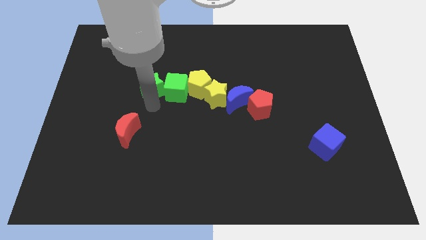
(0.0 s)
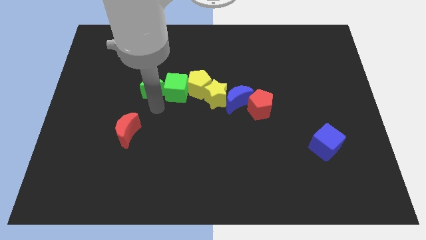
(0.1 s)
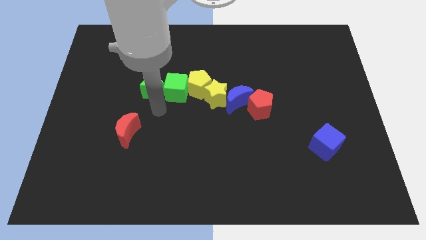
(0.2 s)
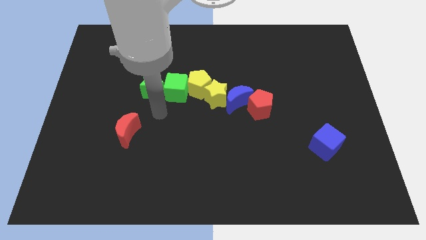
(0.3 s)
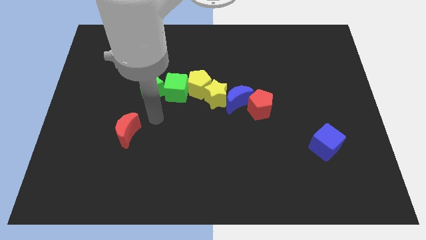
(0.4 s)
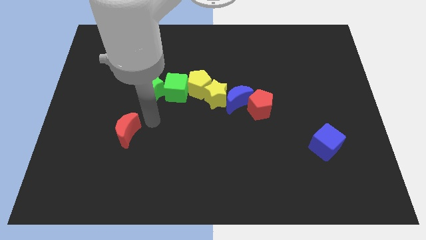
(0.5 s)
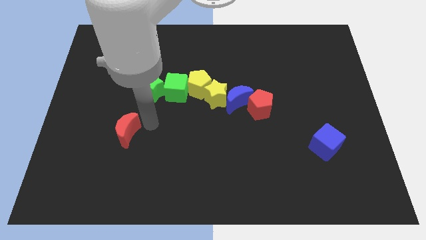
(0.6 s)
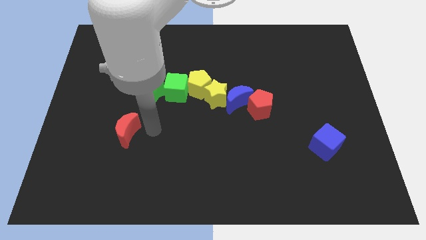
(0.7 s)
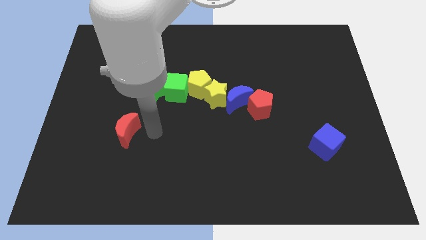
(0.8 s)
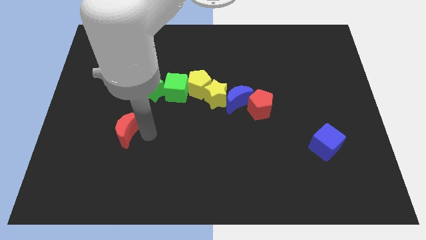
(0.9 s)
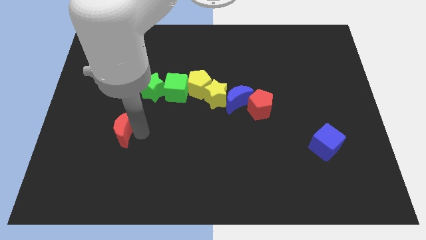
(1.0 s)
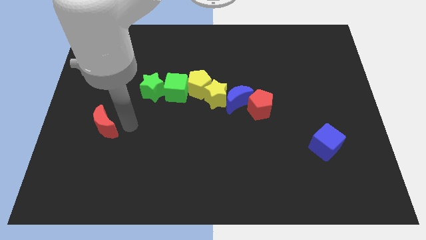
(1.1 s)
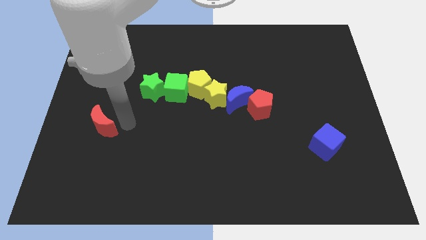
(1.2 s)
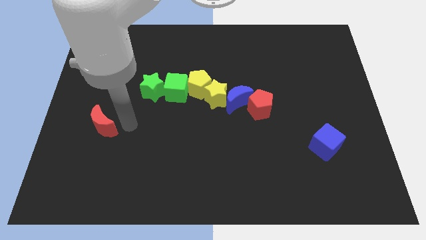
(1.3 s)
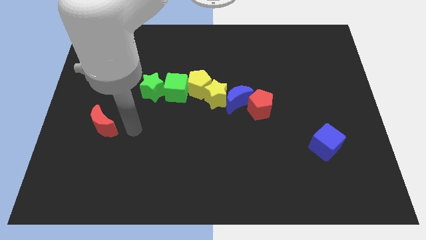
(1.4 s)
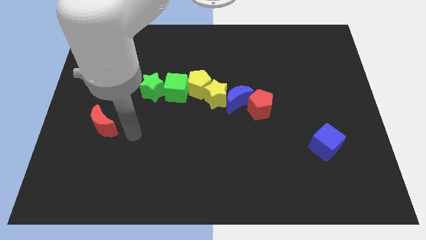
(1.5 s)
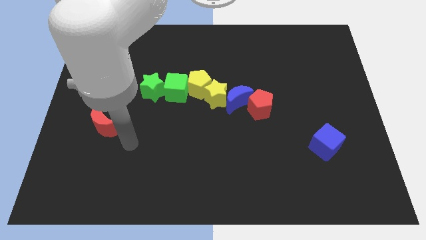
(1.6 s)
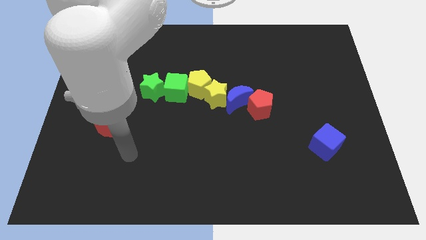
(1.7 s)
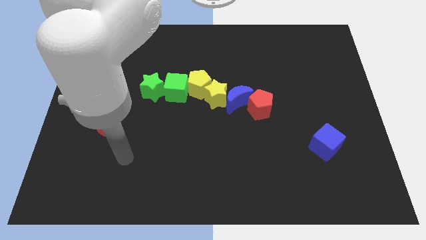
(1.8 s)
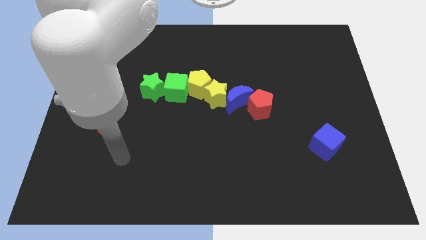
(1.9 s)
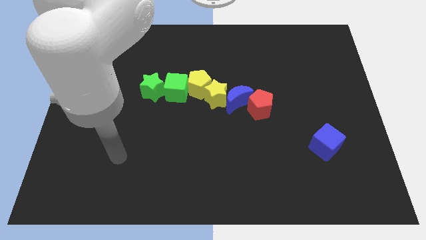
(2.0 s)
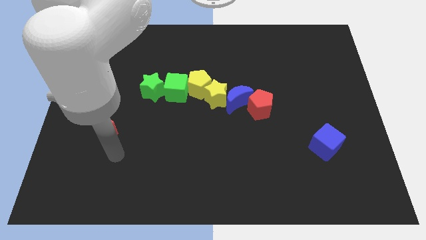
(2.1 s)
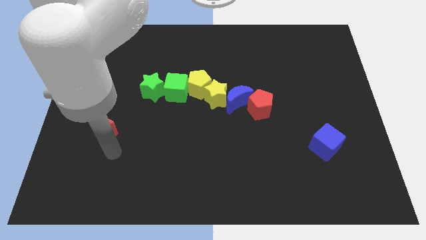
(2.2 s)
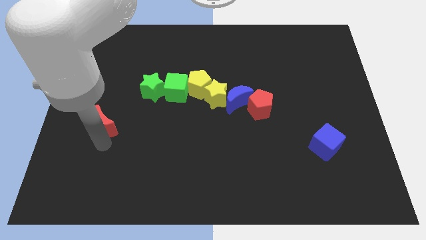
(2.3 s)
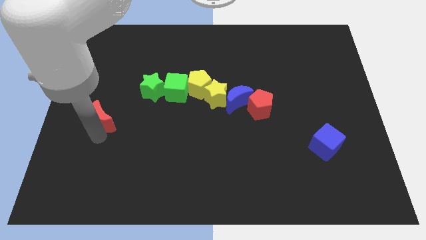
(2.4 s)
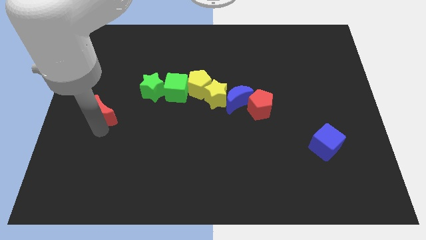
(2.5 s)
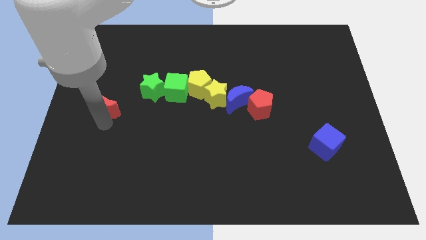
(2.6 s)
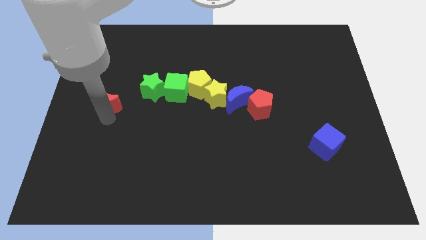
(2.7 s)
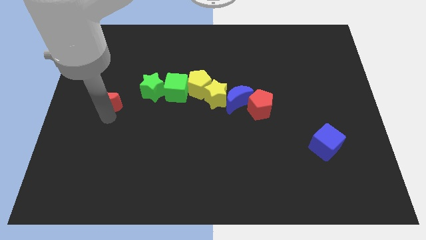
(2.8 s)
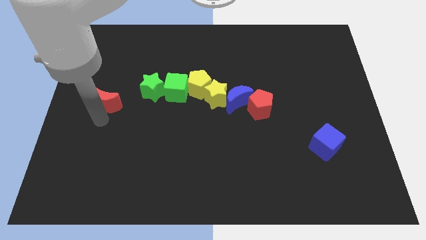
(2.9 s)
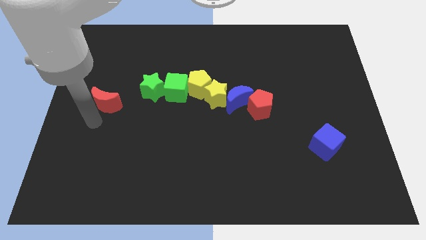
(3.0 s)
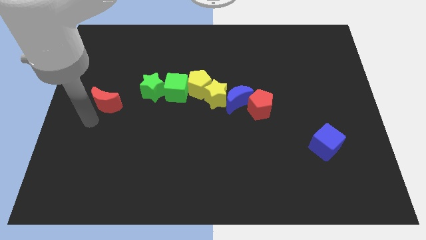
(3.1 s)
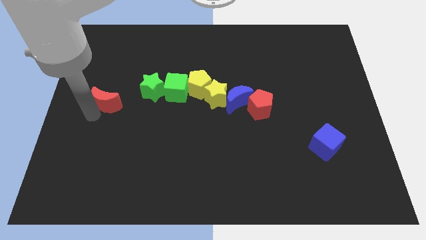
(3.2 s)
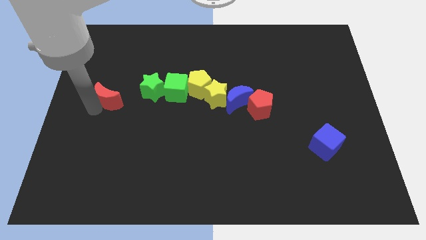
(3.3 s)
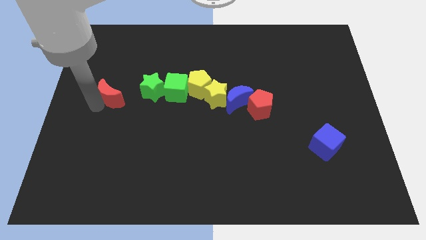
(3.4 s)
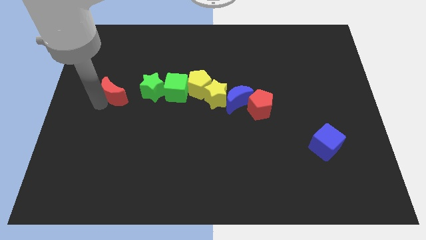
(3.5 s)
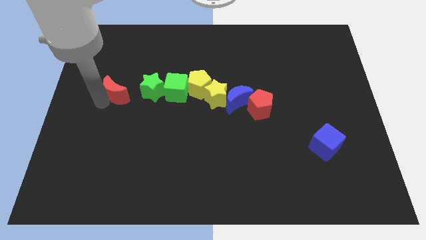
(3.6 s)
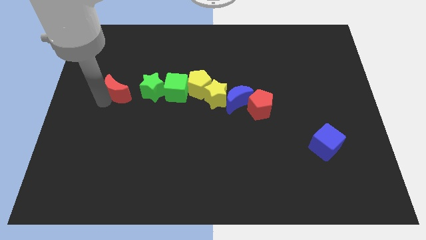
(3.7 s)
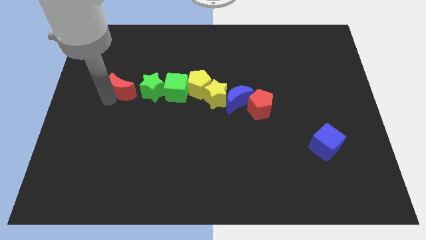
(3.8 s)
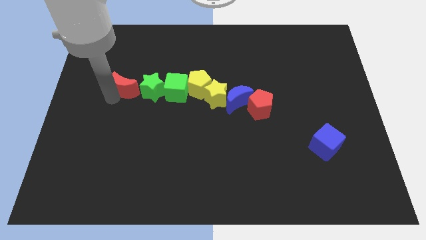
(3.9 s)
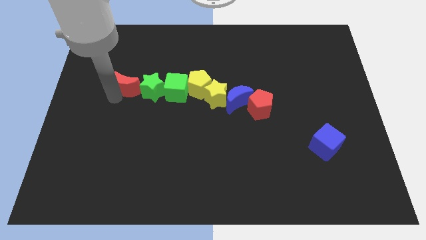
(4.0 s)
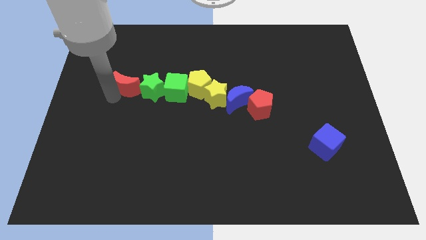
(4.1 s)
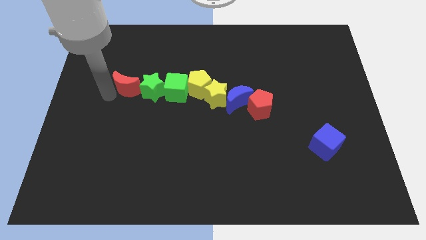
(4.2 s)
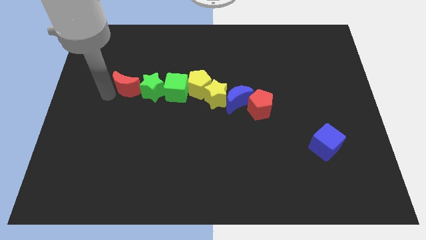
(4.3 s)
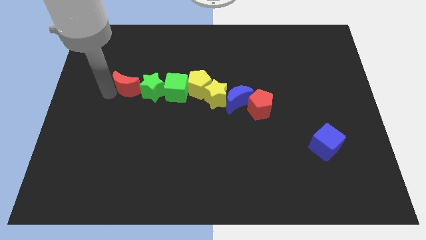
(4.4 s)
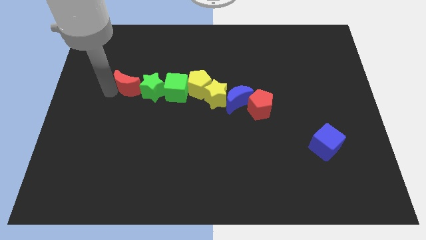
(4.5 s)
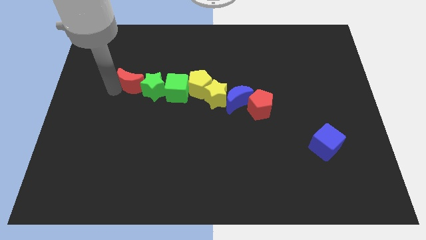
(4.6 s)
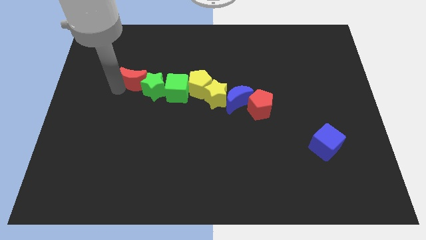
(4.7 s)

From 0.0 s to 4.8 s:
slide the red moon into the left side of the green star

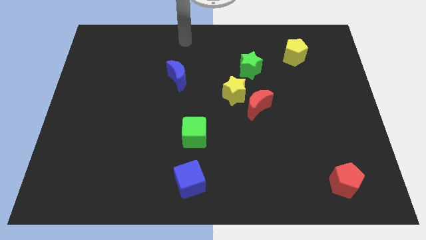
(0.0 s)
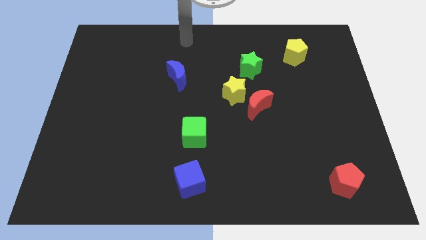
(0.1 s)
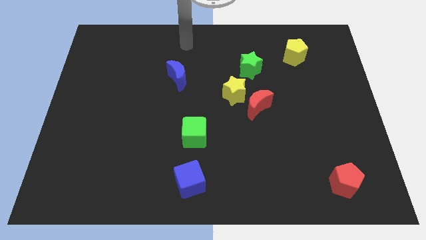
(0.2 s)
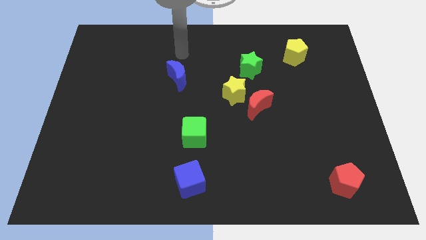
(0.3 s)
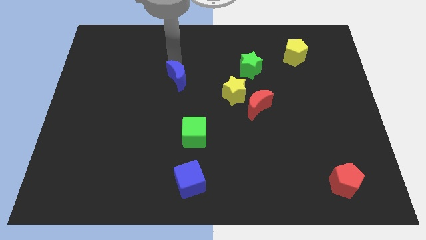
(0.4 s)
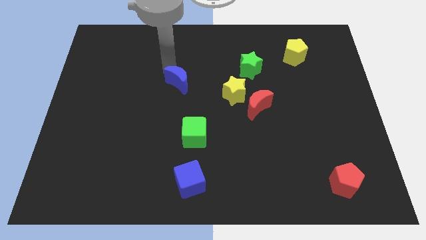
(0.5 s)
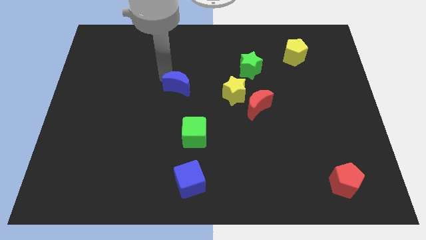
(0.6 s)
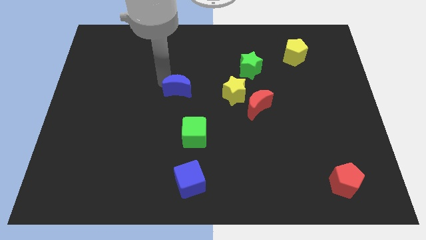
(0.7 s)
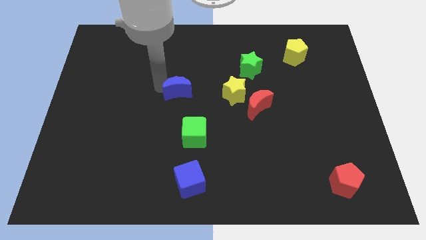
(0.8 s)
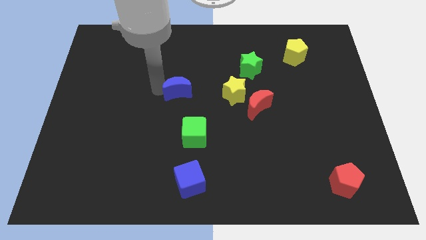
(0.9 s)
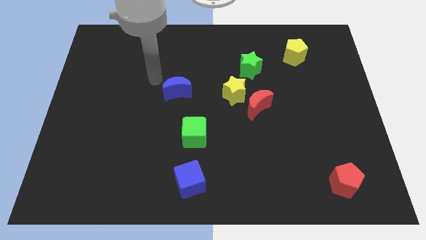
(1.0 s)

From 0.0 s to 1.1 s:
tap left edge of blue moon

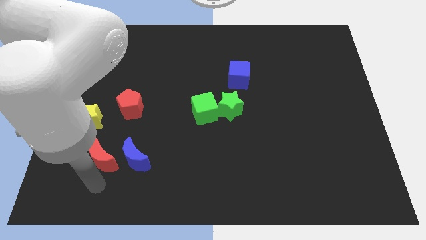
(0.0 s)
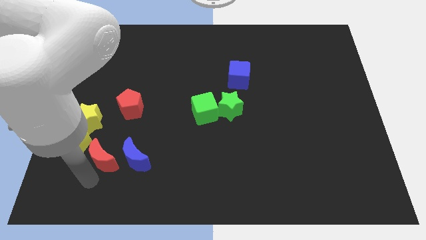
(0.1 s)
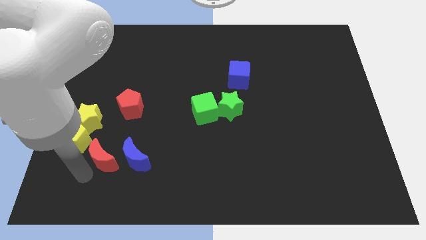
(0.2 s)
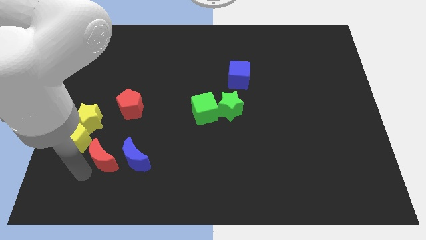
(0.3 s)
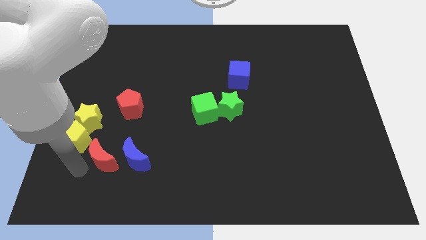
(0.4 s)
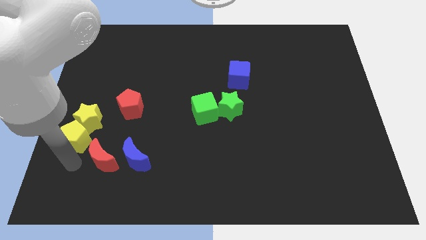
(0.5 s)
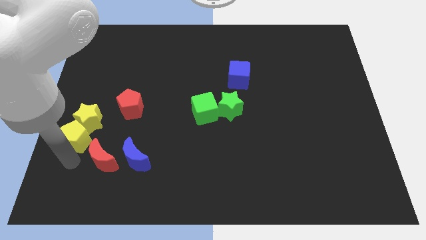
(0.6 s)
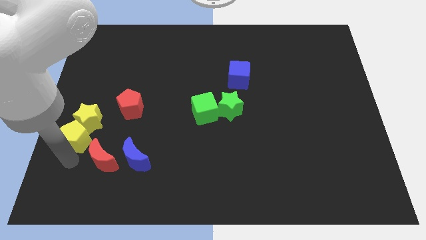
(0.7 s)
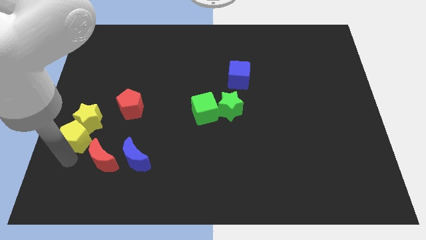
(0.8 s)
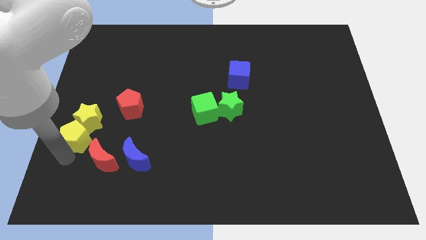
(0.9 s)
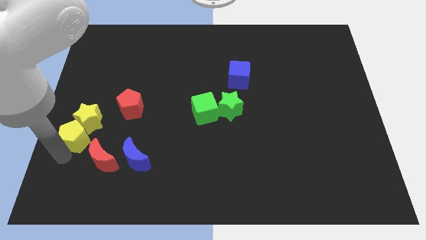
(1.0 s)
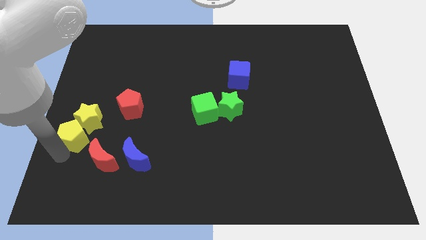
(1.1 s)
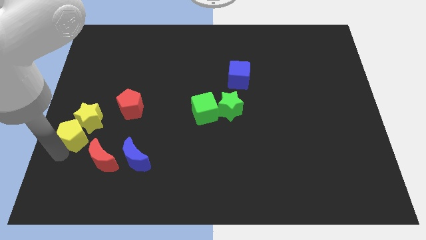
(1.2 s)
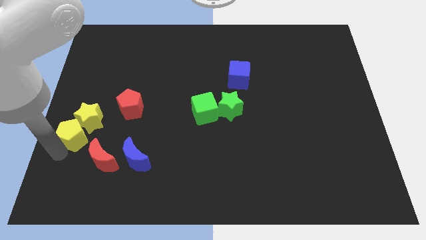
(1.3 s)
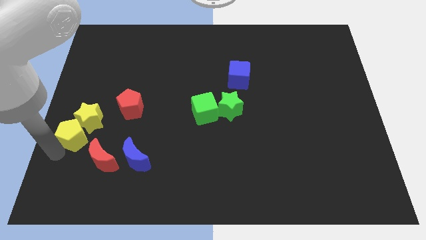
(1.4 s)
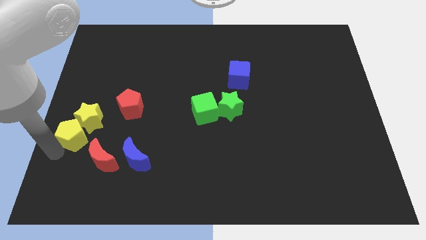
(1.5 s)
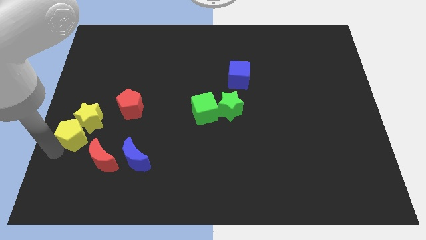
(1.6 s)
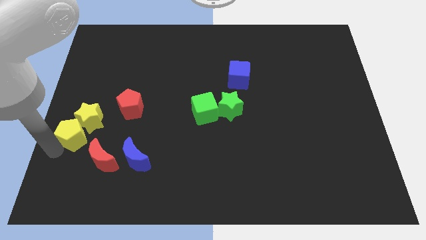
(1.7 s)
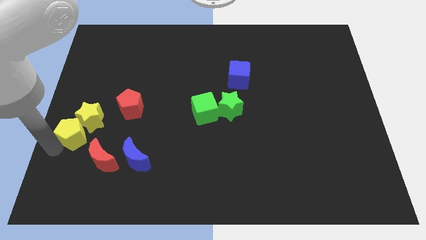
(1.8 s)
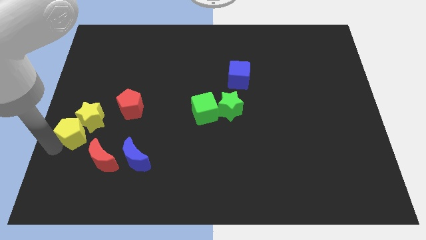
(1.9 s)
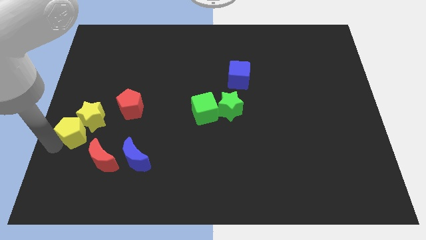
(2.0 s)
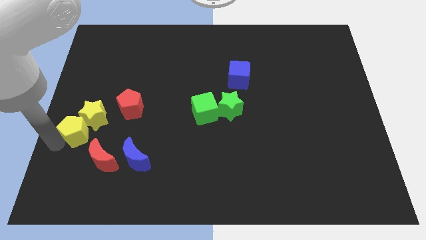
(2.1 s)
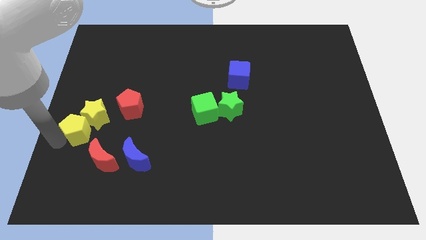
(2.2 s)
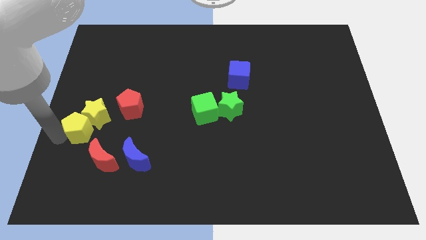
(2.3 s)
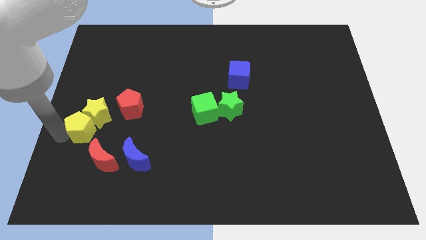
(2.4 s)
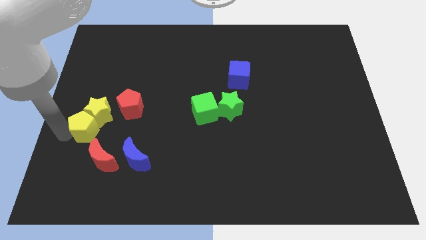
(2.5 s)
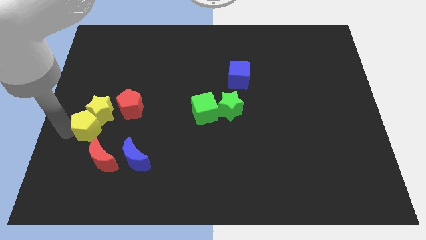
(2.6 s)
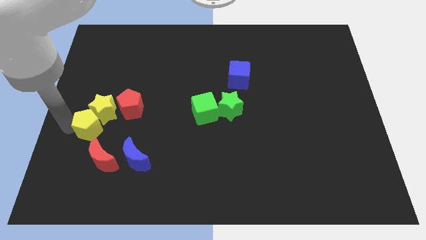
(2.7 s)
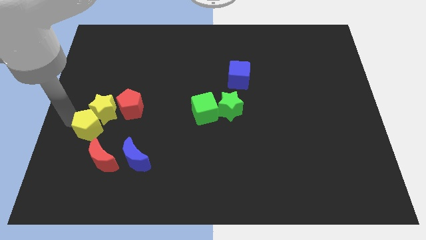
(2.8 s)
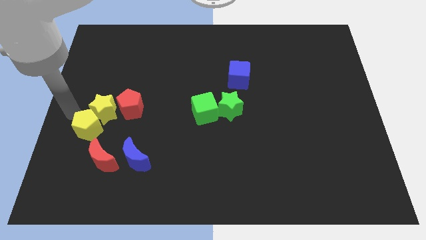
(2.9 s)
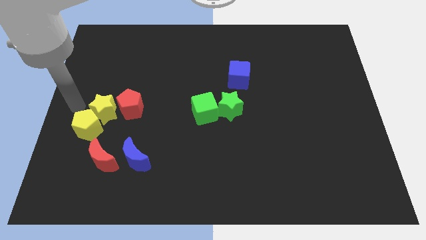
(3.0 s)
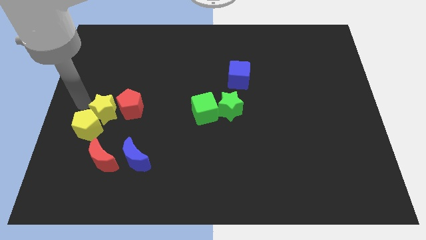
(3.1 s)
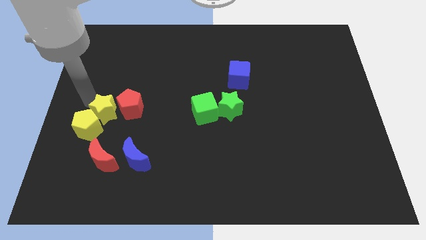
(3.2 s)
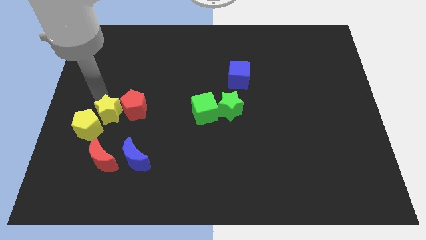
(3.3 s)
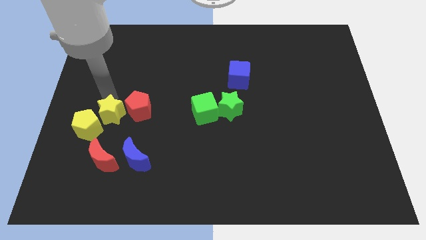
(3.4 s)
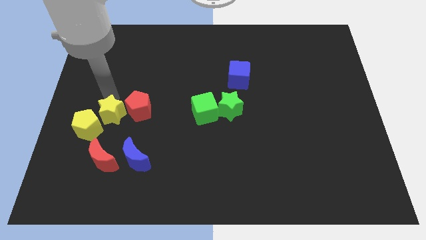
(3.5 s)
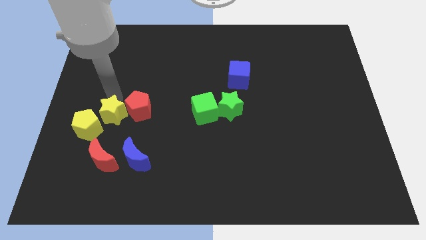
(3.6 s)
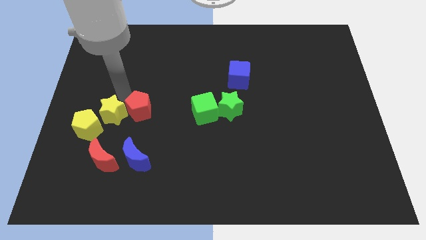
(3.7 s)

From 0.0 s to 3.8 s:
place the yellow star in between the yellow pentagon and red pentagon
